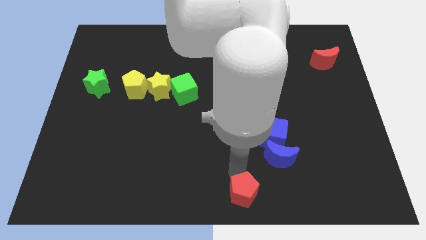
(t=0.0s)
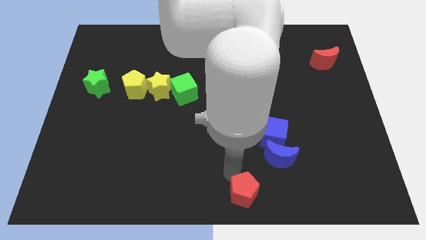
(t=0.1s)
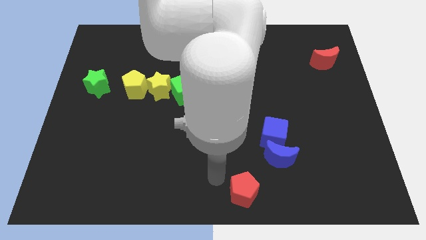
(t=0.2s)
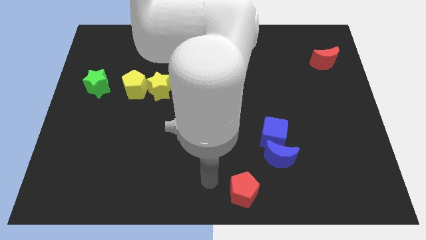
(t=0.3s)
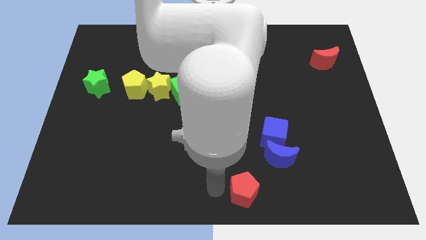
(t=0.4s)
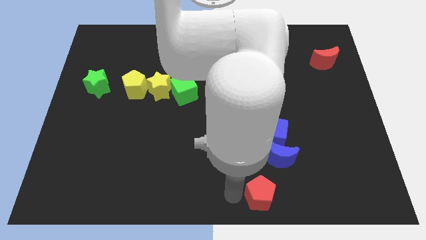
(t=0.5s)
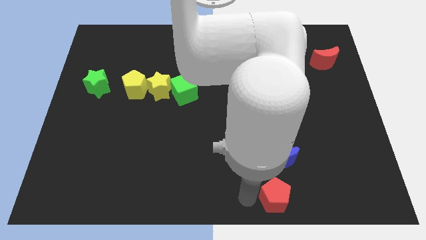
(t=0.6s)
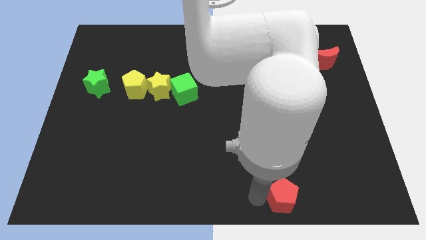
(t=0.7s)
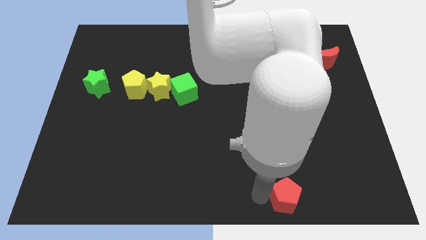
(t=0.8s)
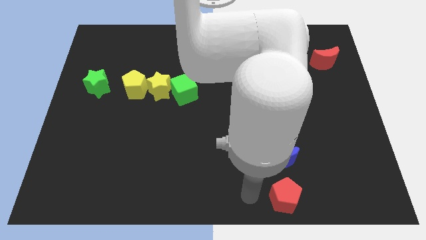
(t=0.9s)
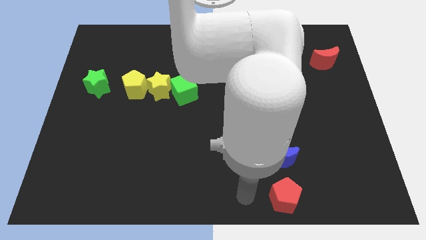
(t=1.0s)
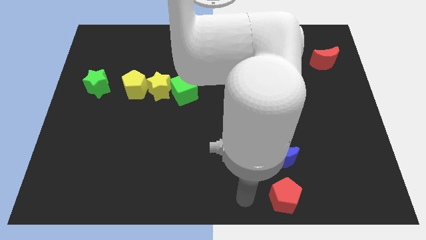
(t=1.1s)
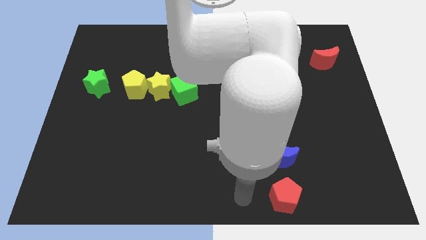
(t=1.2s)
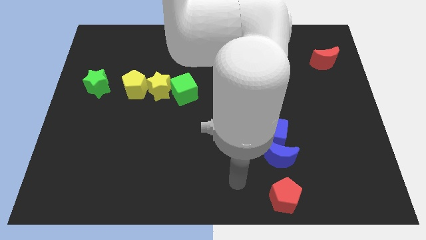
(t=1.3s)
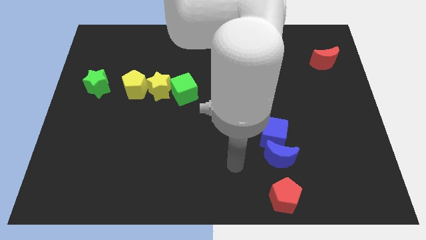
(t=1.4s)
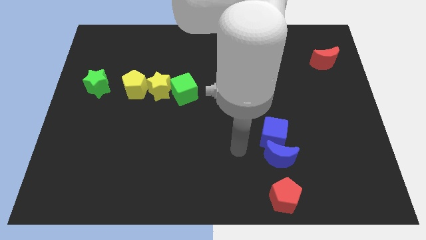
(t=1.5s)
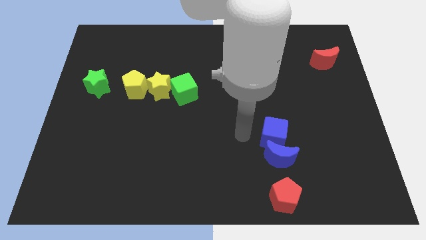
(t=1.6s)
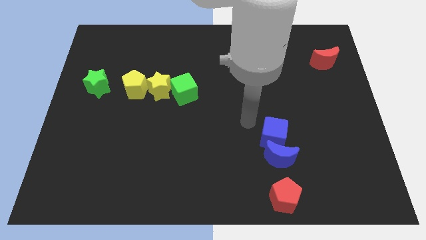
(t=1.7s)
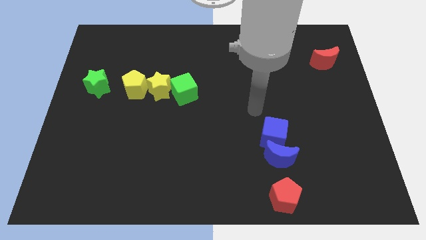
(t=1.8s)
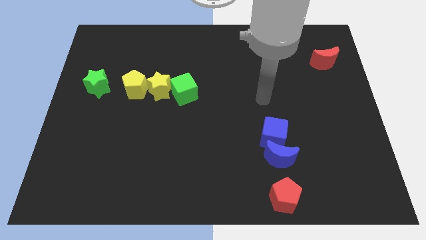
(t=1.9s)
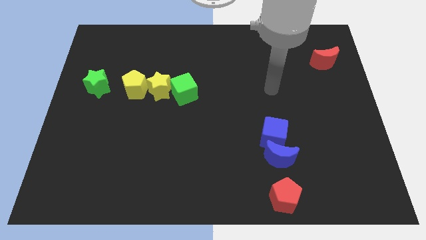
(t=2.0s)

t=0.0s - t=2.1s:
place the red pentagon at the bottom side of the blue moon

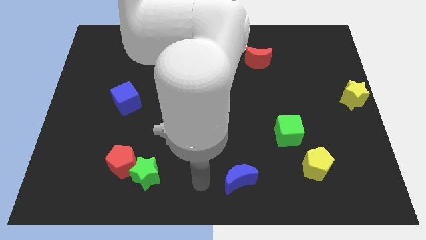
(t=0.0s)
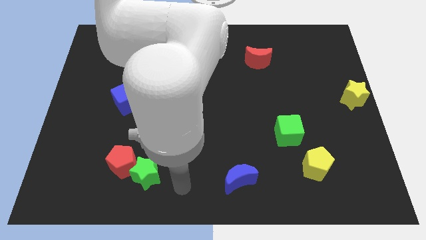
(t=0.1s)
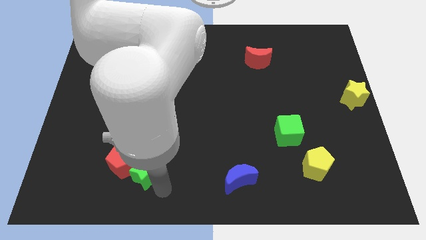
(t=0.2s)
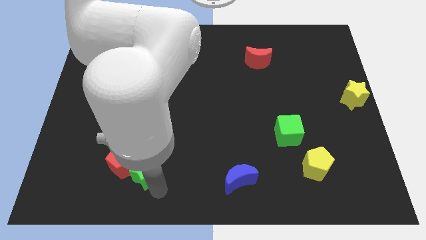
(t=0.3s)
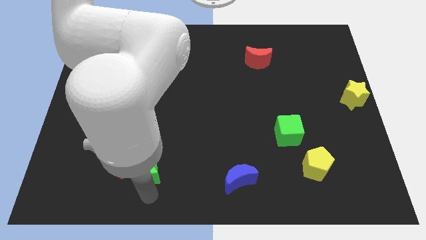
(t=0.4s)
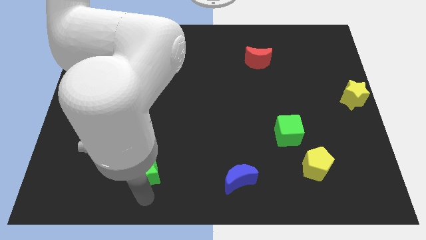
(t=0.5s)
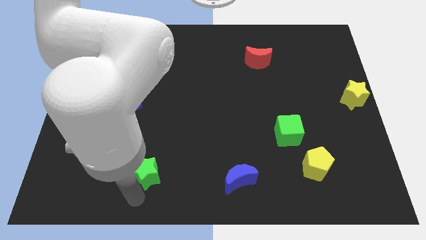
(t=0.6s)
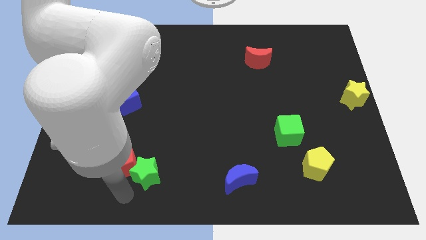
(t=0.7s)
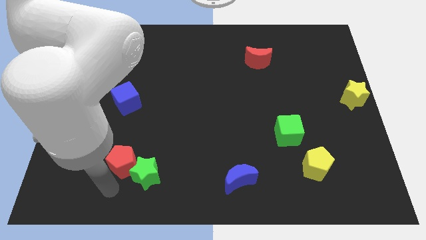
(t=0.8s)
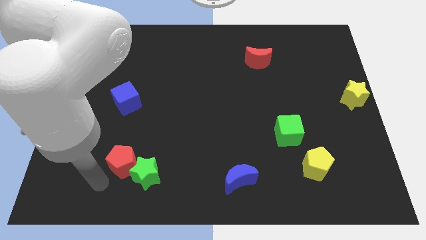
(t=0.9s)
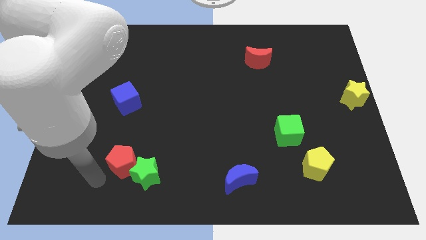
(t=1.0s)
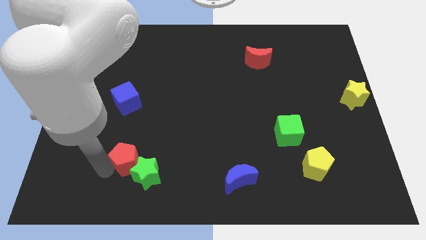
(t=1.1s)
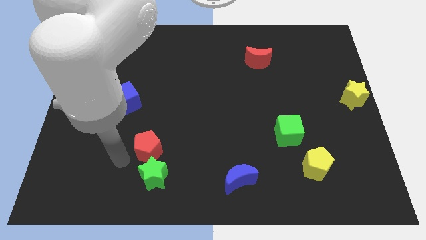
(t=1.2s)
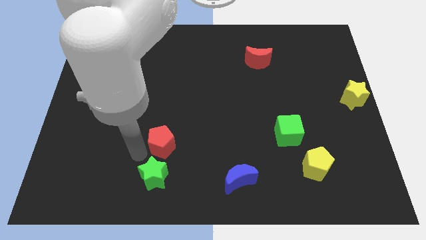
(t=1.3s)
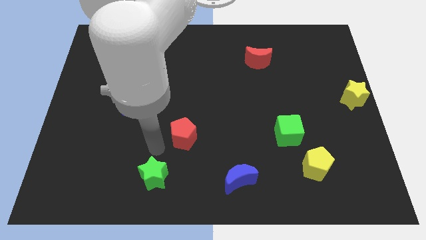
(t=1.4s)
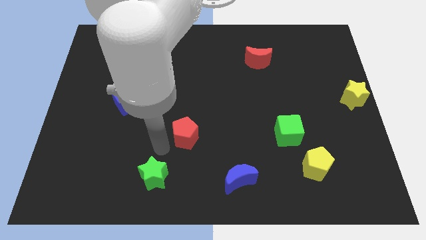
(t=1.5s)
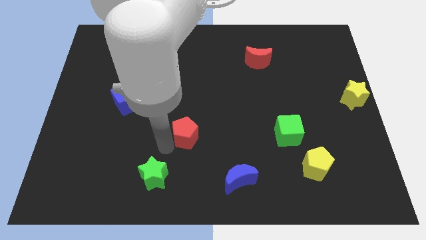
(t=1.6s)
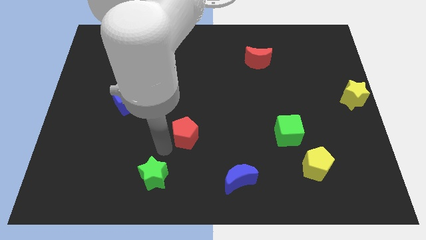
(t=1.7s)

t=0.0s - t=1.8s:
push the red pentagon to the right of the board

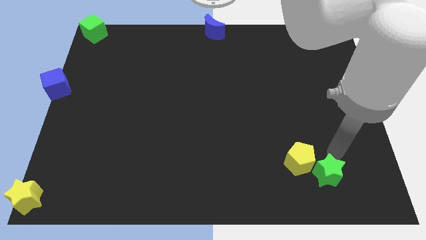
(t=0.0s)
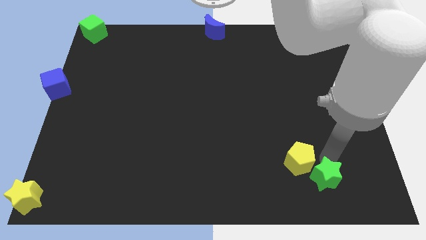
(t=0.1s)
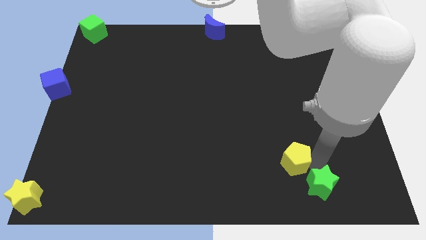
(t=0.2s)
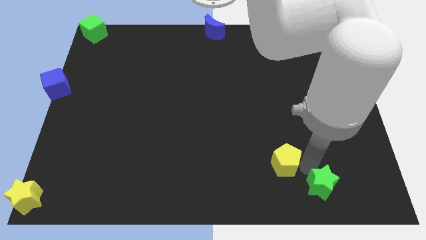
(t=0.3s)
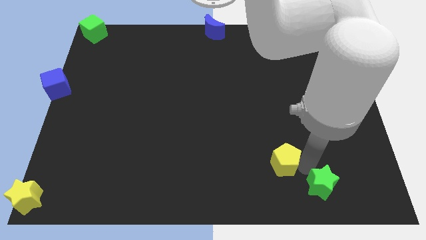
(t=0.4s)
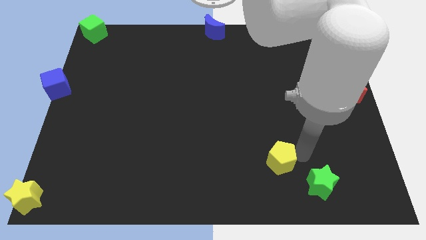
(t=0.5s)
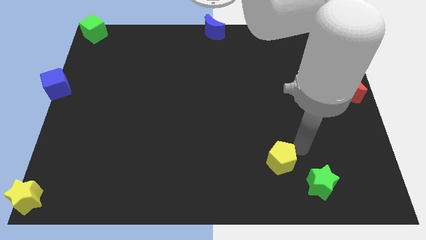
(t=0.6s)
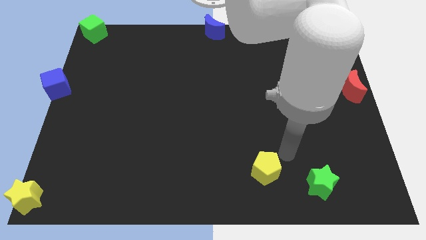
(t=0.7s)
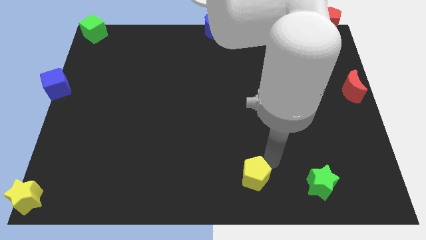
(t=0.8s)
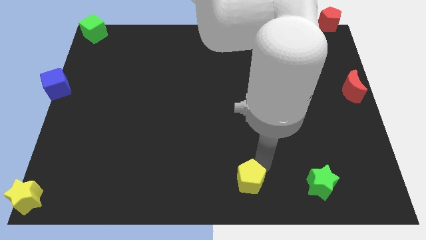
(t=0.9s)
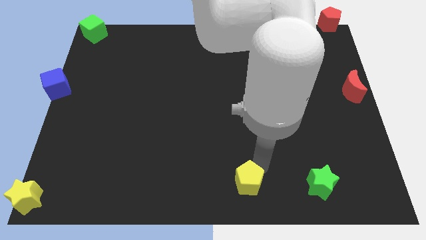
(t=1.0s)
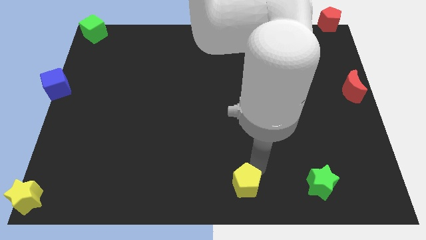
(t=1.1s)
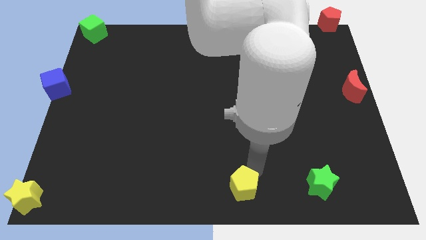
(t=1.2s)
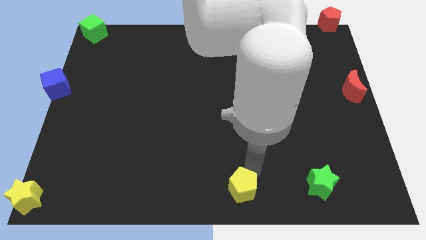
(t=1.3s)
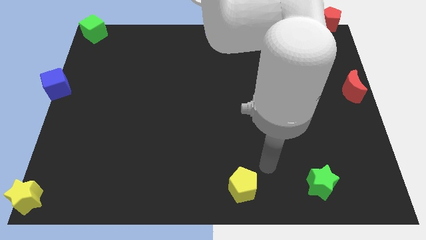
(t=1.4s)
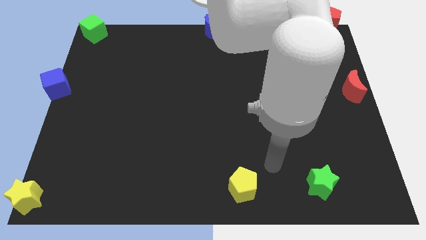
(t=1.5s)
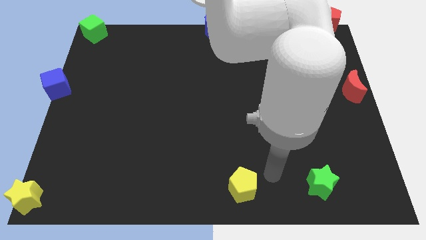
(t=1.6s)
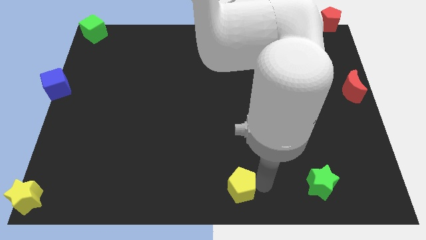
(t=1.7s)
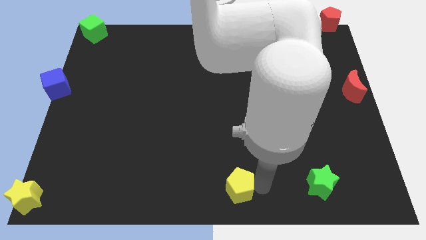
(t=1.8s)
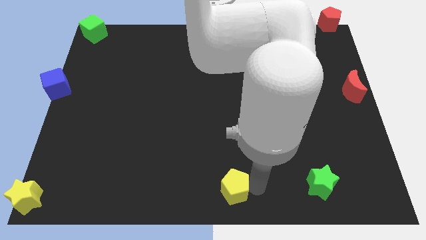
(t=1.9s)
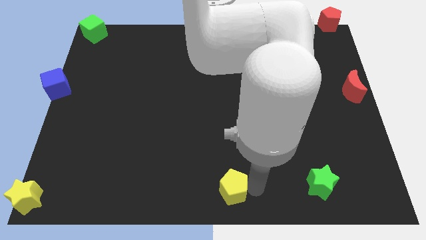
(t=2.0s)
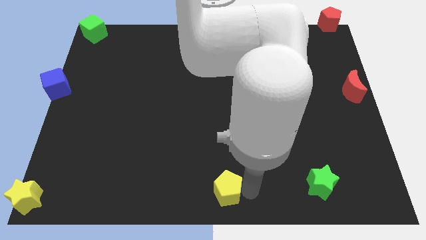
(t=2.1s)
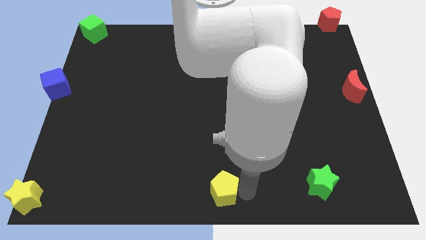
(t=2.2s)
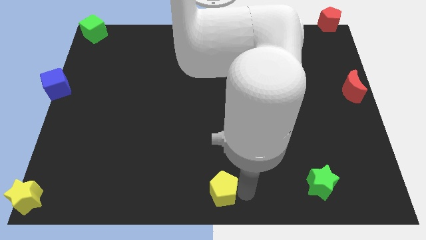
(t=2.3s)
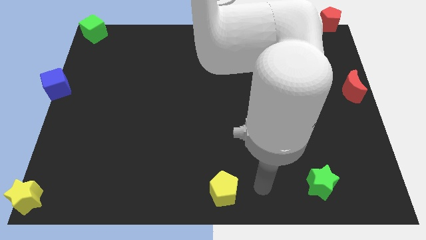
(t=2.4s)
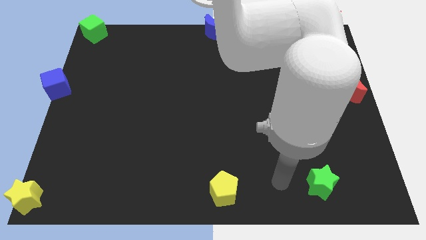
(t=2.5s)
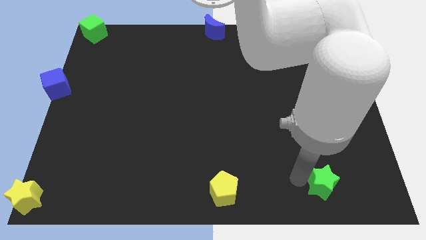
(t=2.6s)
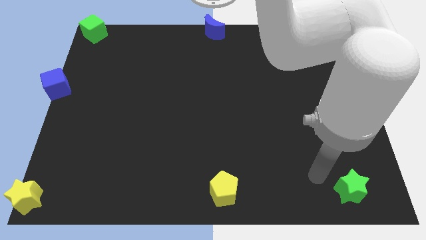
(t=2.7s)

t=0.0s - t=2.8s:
drag th yellow pentagon to the bottom center

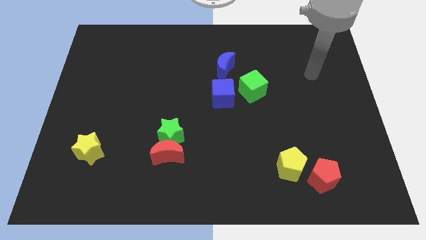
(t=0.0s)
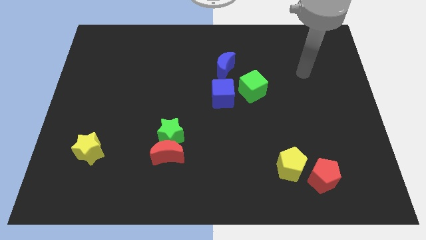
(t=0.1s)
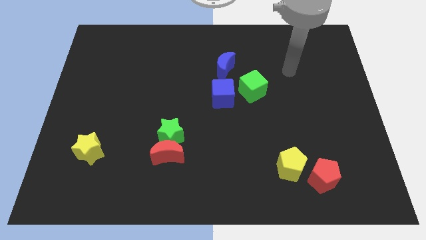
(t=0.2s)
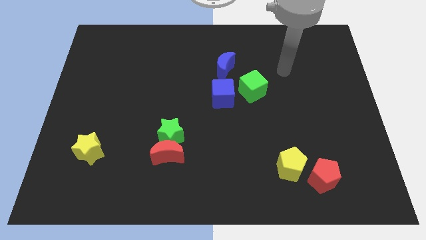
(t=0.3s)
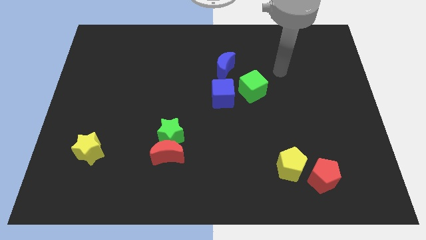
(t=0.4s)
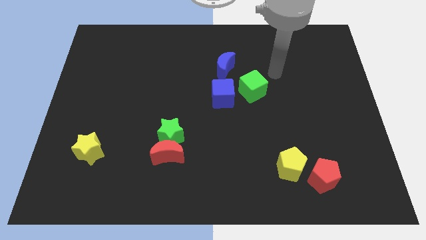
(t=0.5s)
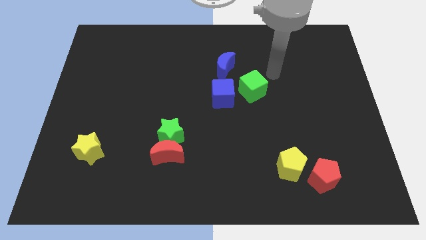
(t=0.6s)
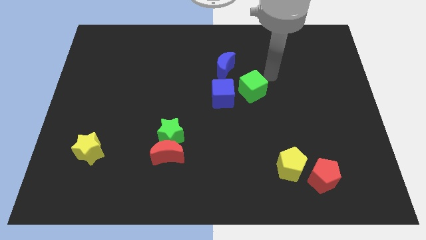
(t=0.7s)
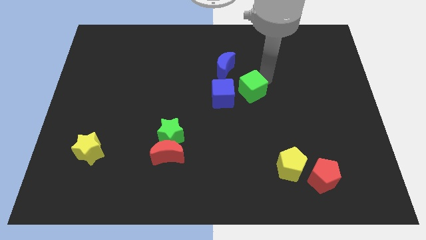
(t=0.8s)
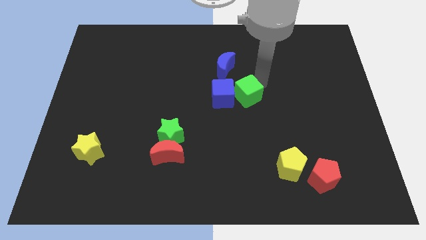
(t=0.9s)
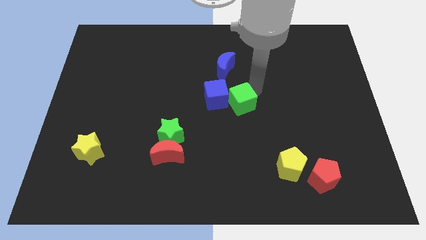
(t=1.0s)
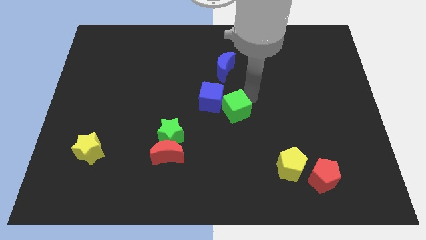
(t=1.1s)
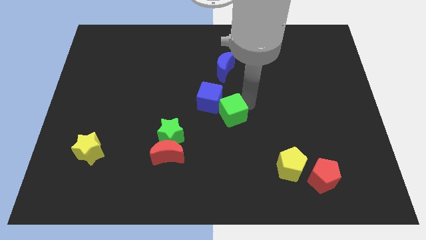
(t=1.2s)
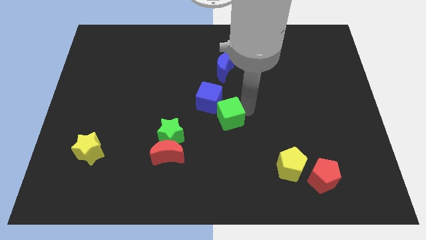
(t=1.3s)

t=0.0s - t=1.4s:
move the green cube into the blue cube

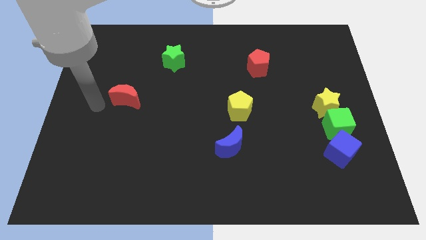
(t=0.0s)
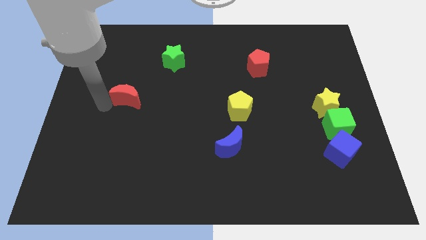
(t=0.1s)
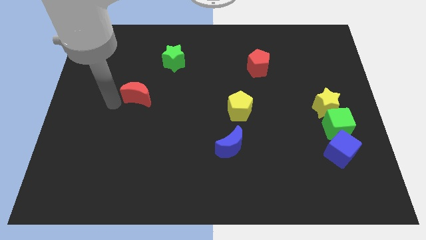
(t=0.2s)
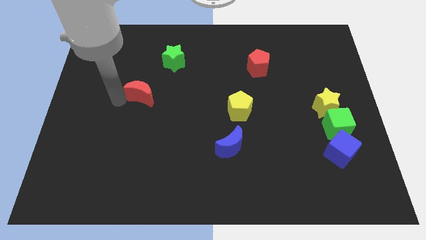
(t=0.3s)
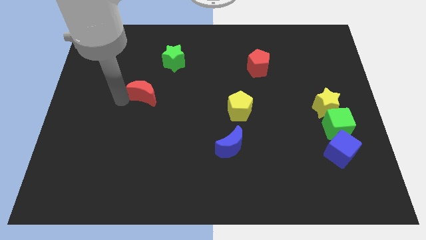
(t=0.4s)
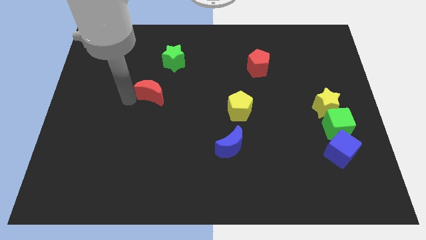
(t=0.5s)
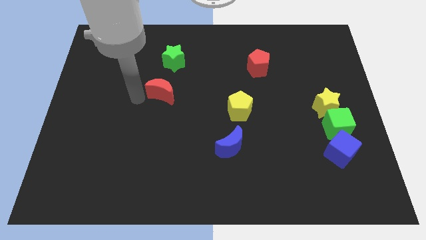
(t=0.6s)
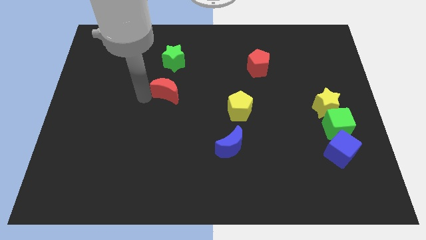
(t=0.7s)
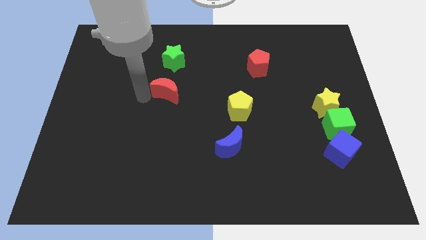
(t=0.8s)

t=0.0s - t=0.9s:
move the red crescenmt to the center of the board
